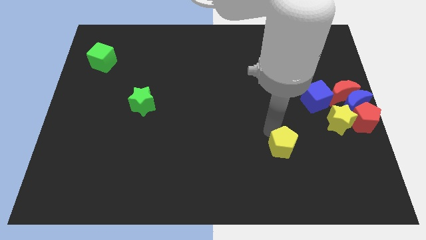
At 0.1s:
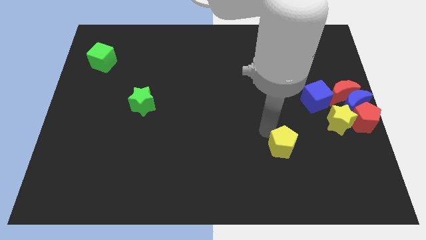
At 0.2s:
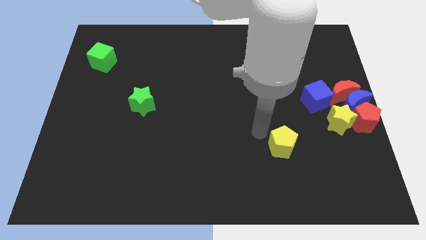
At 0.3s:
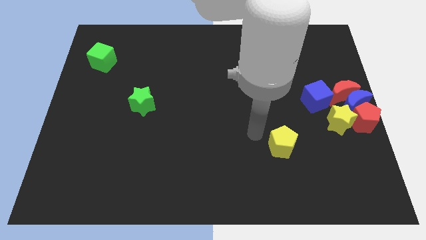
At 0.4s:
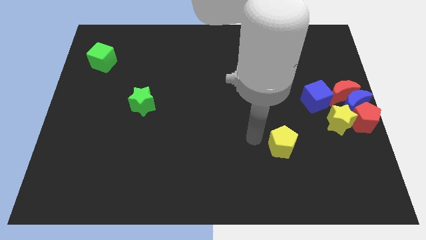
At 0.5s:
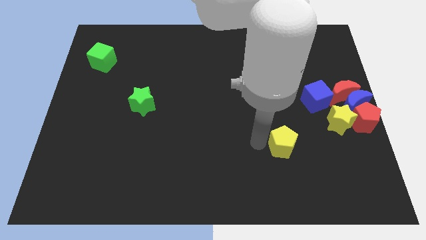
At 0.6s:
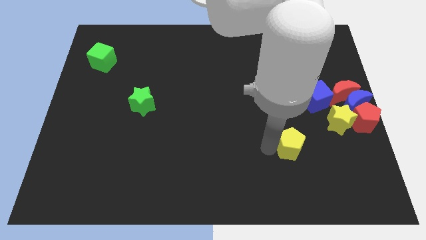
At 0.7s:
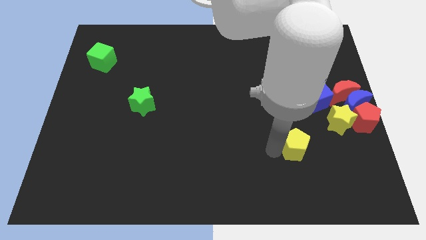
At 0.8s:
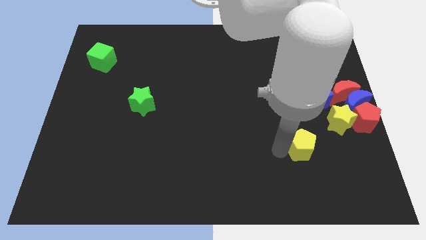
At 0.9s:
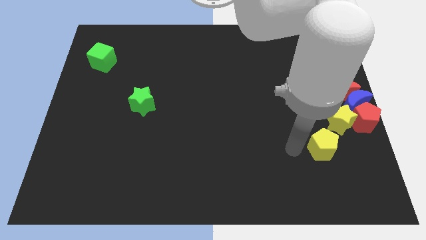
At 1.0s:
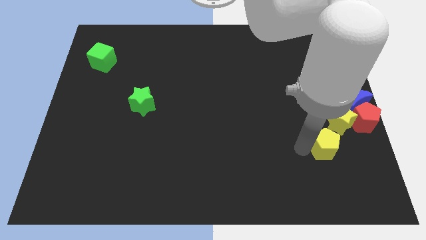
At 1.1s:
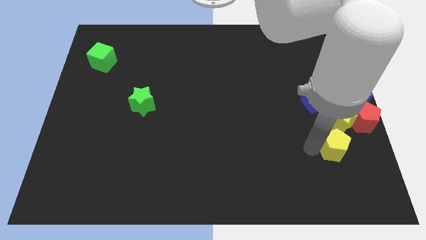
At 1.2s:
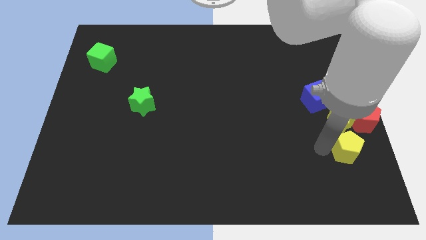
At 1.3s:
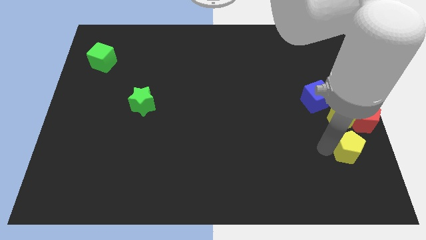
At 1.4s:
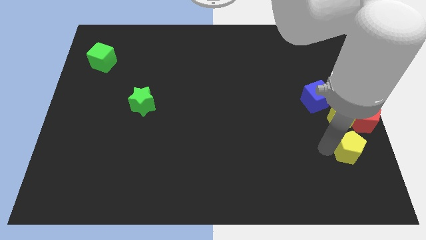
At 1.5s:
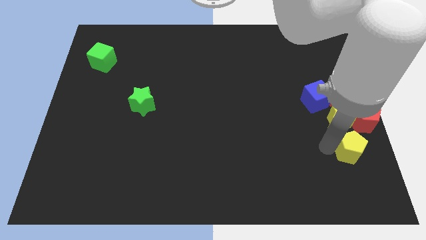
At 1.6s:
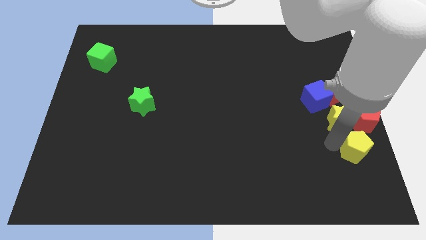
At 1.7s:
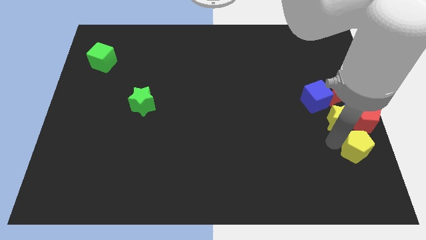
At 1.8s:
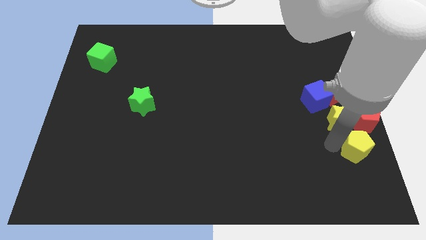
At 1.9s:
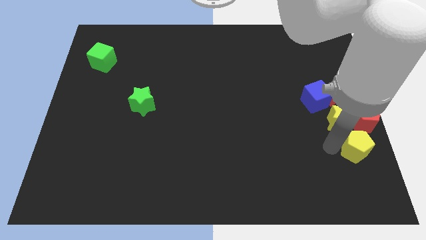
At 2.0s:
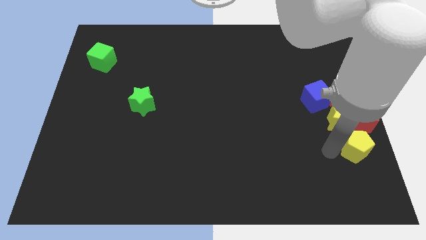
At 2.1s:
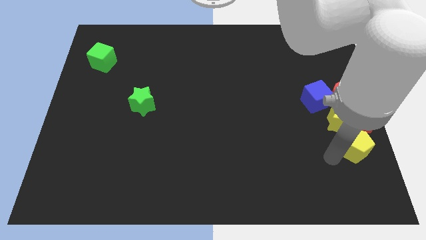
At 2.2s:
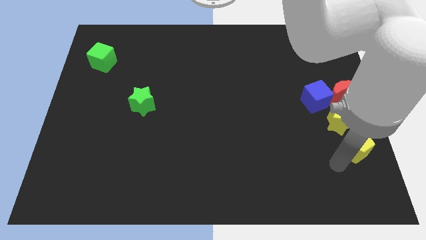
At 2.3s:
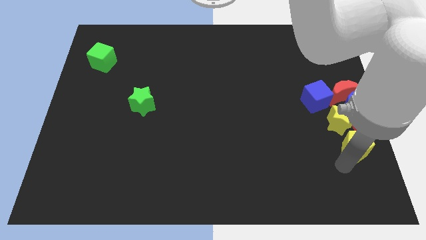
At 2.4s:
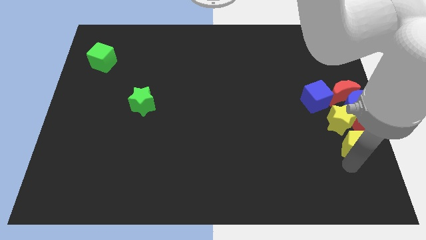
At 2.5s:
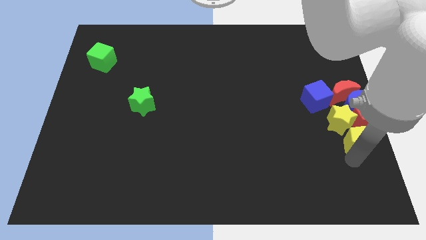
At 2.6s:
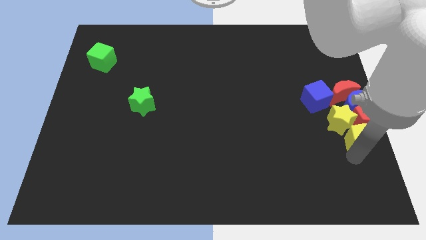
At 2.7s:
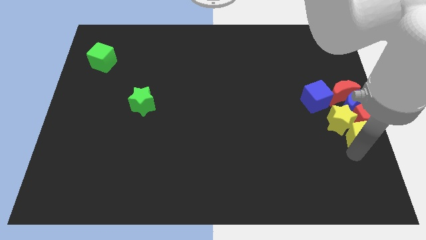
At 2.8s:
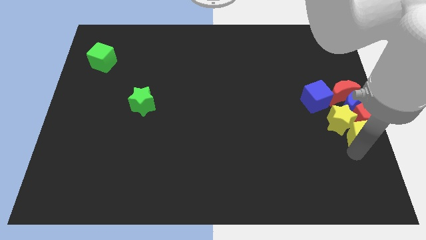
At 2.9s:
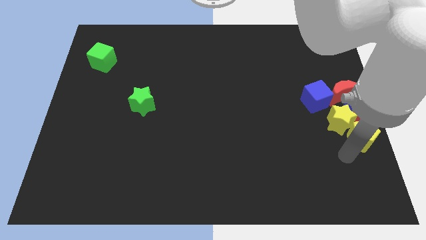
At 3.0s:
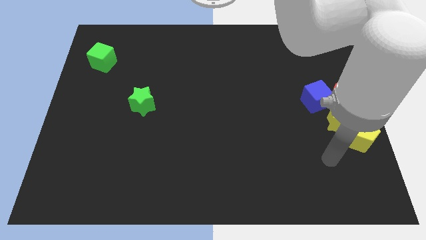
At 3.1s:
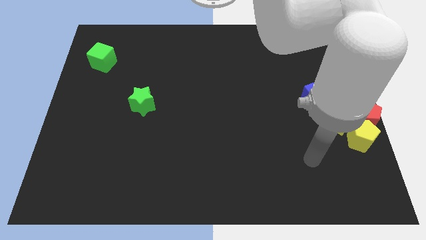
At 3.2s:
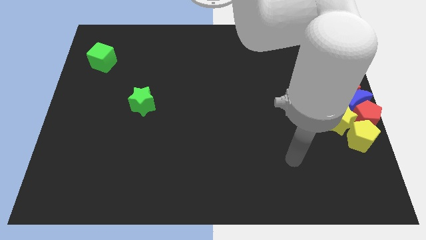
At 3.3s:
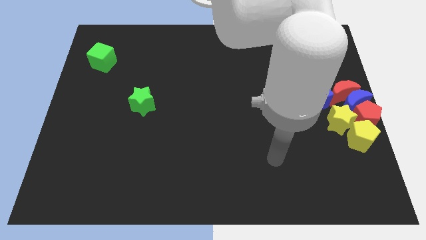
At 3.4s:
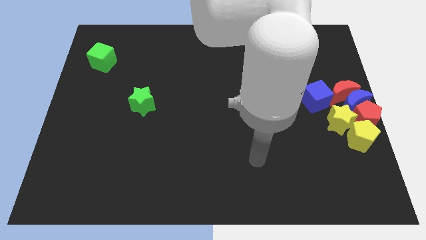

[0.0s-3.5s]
push the yellow pentagon to the group of blocks

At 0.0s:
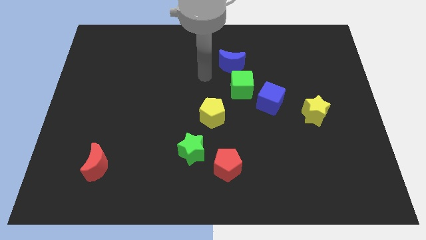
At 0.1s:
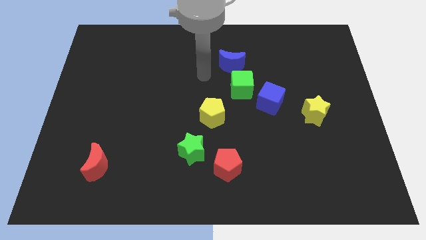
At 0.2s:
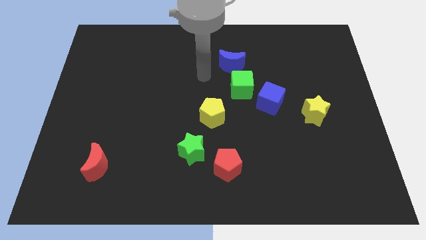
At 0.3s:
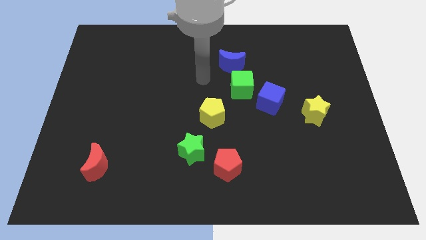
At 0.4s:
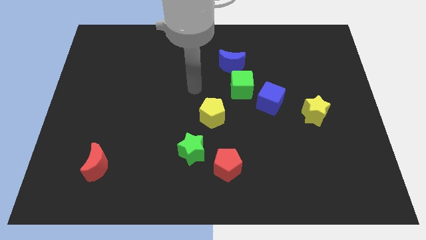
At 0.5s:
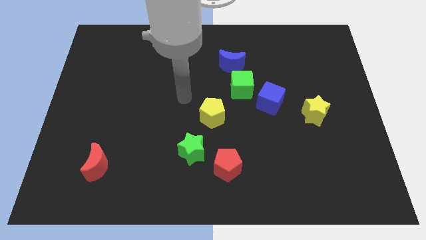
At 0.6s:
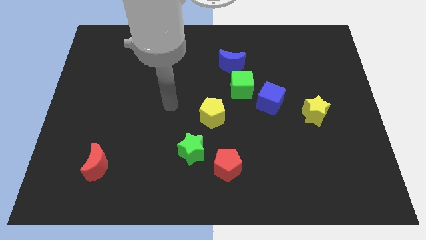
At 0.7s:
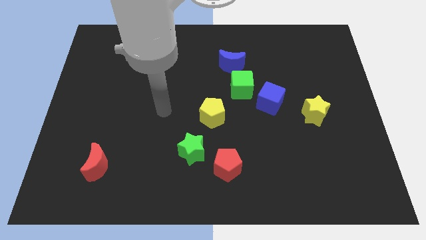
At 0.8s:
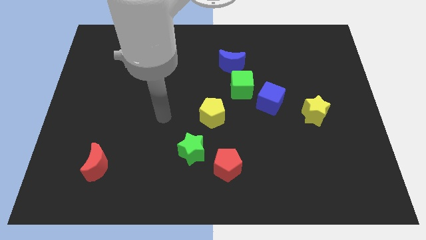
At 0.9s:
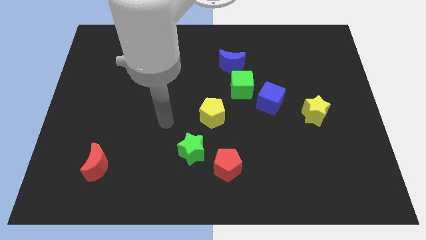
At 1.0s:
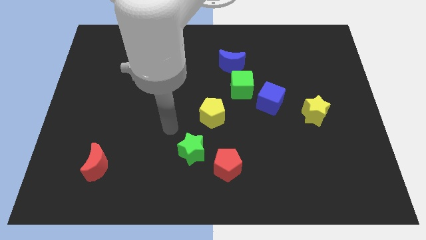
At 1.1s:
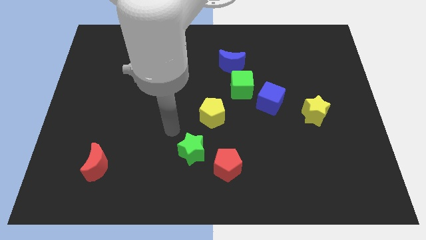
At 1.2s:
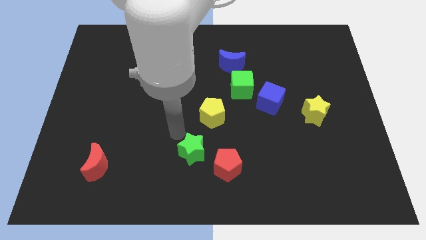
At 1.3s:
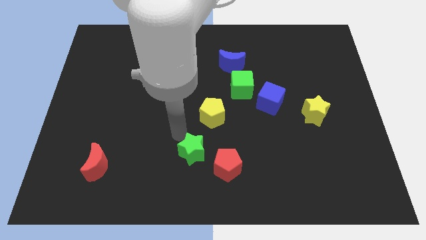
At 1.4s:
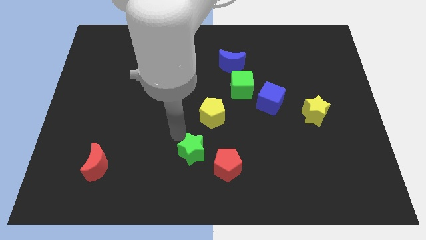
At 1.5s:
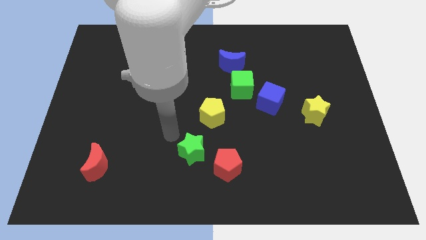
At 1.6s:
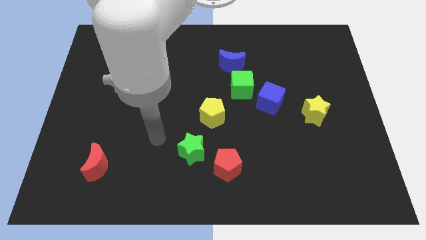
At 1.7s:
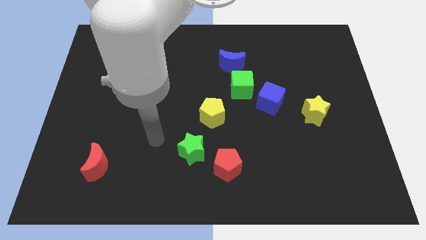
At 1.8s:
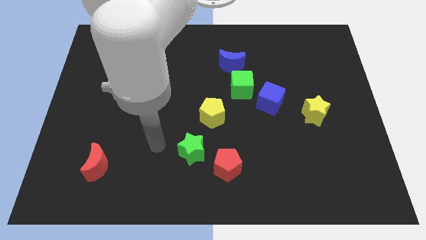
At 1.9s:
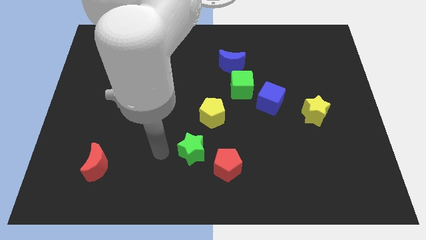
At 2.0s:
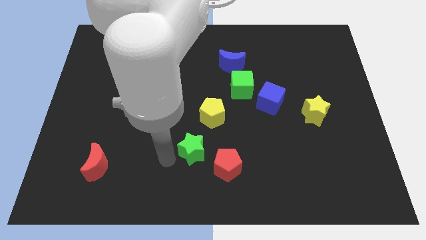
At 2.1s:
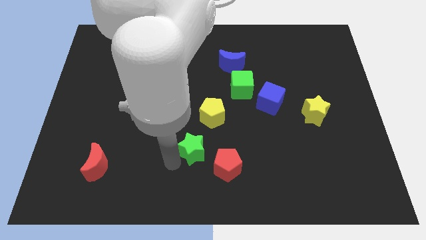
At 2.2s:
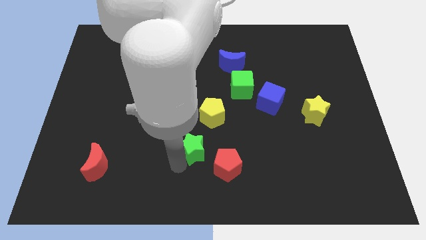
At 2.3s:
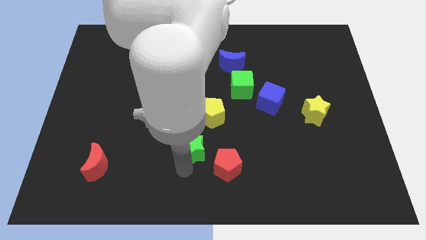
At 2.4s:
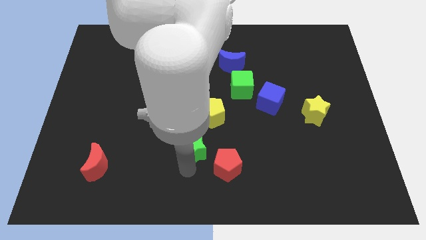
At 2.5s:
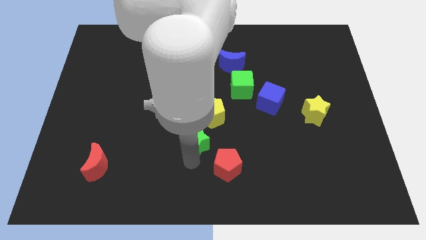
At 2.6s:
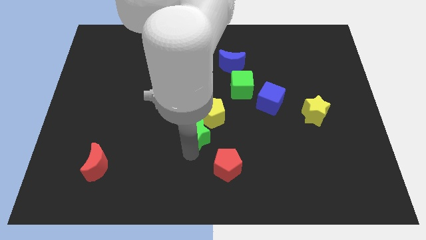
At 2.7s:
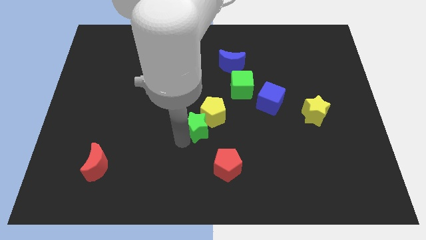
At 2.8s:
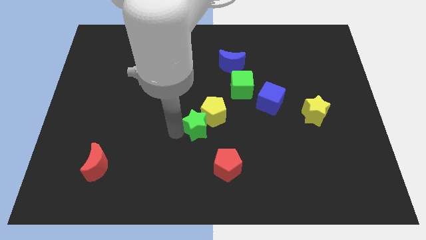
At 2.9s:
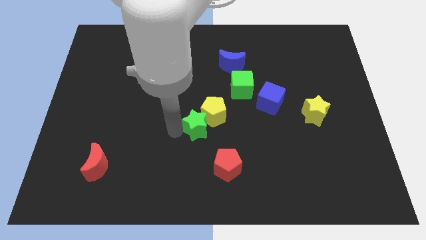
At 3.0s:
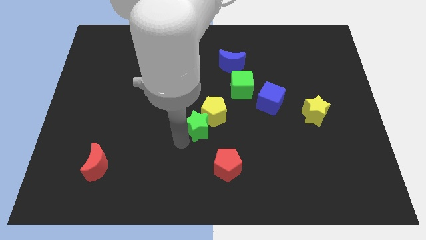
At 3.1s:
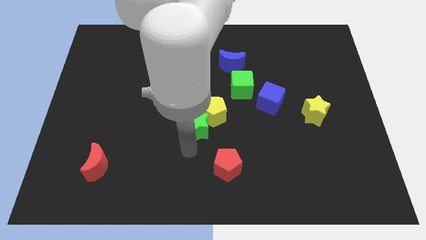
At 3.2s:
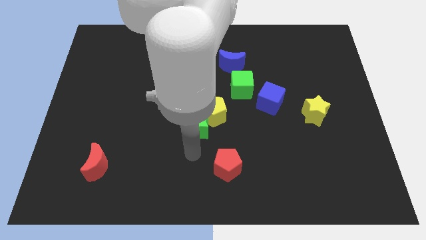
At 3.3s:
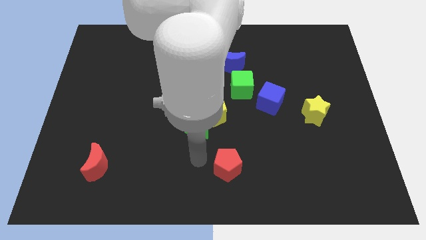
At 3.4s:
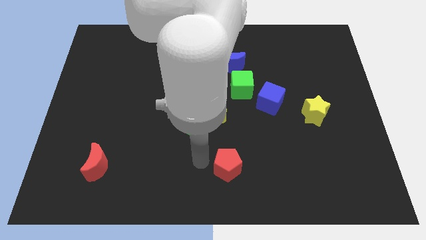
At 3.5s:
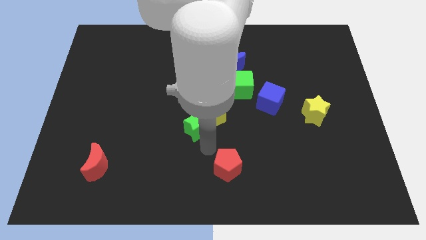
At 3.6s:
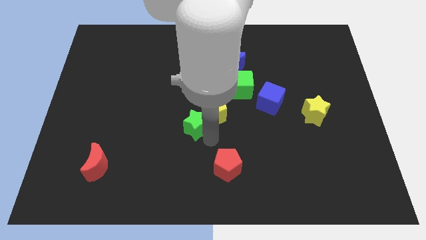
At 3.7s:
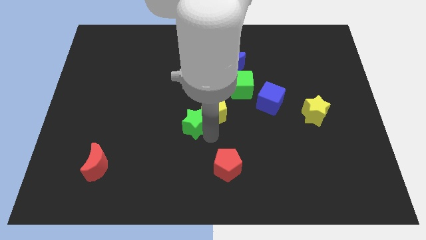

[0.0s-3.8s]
push the green star into the yellow pentagon

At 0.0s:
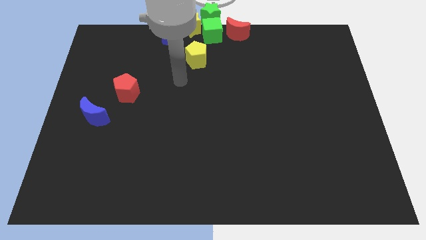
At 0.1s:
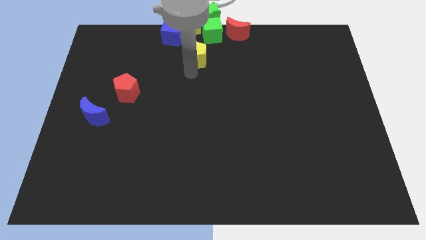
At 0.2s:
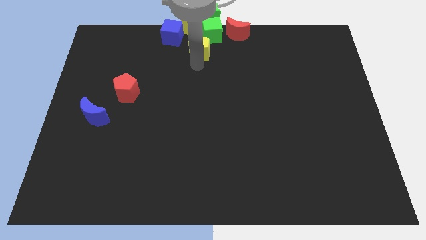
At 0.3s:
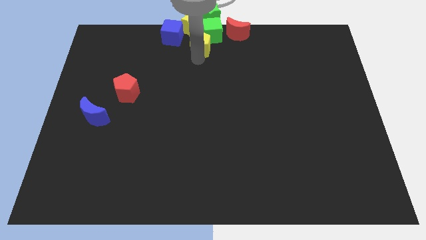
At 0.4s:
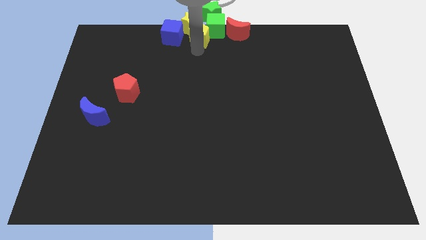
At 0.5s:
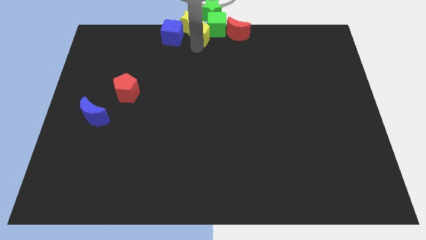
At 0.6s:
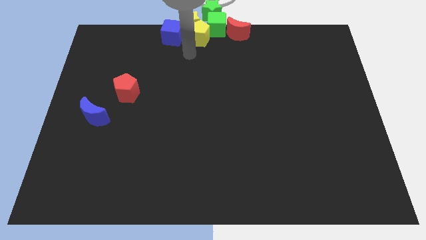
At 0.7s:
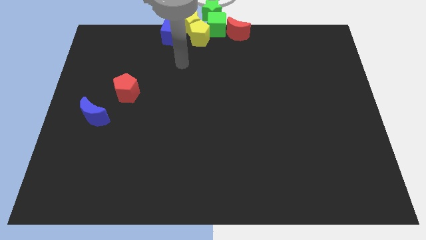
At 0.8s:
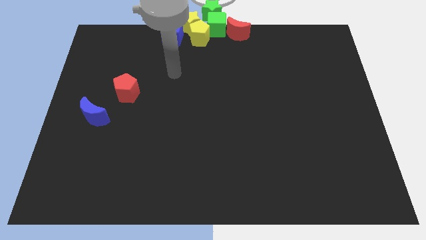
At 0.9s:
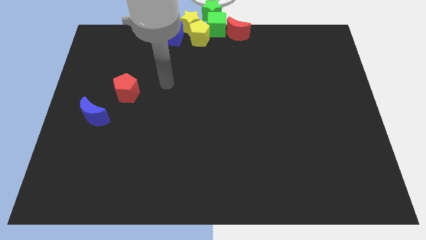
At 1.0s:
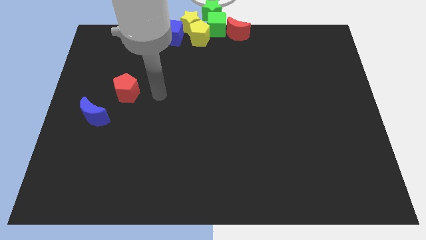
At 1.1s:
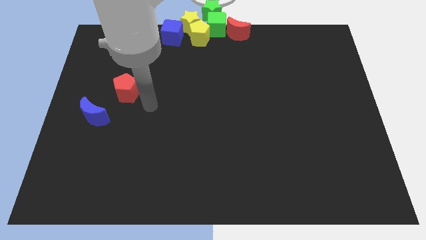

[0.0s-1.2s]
place yellow pentagon below the yellow star

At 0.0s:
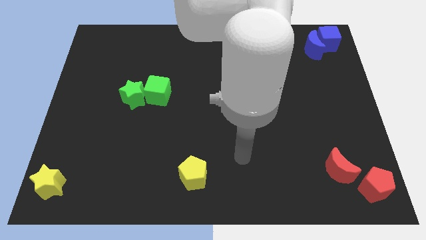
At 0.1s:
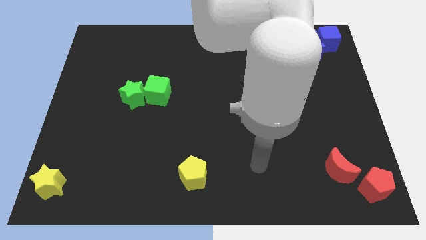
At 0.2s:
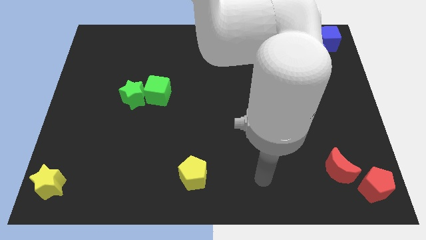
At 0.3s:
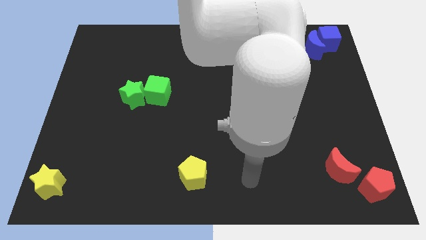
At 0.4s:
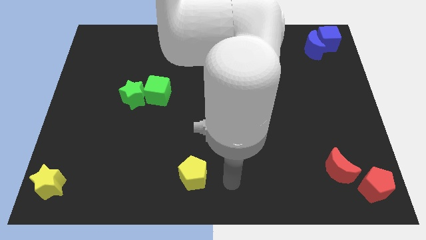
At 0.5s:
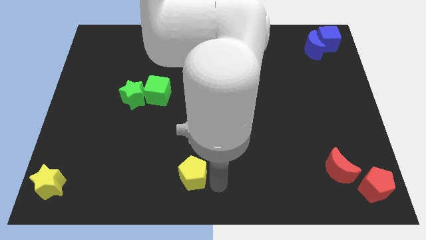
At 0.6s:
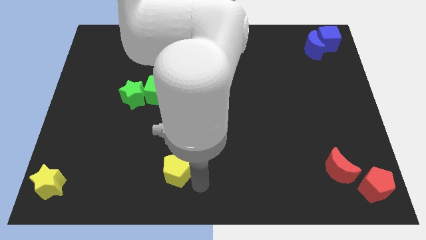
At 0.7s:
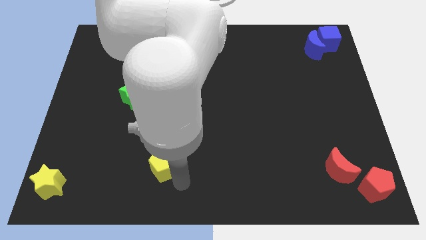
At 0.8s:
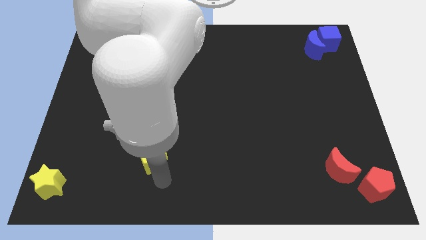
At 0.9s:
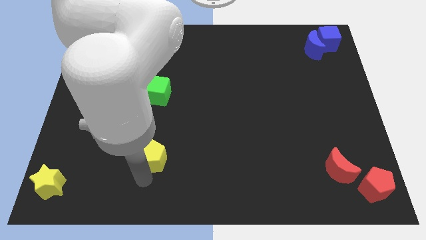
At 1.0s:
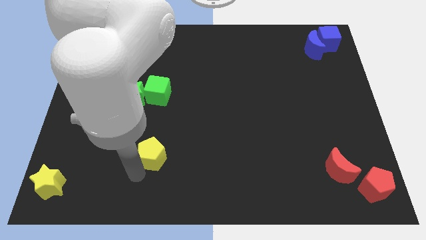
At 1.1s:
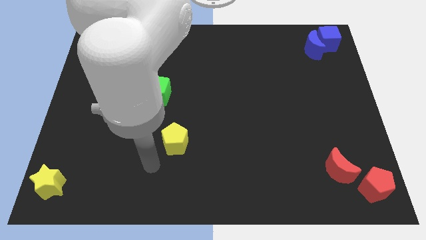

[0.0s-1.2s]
place yellow pentagon below green cube
